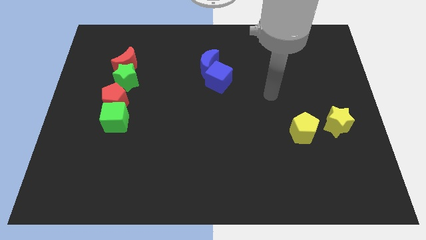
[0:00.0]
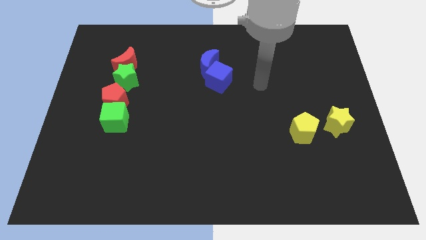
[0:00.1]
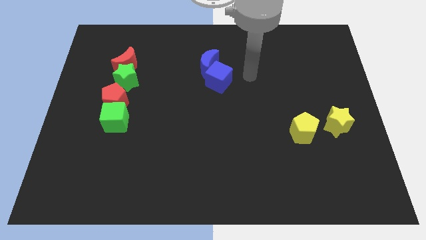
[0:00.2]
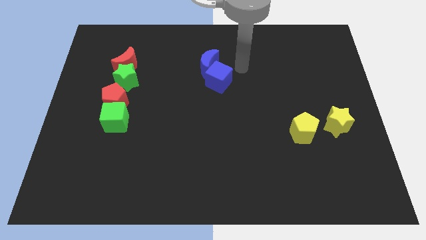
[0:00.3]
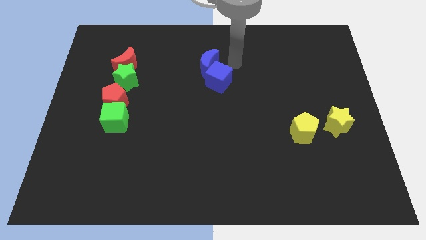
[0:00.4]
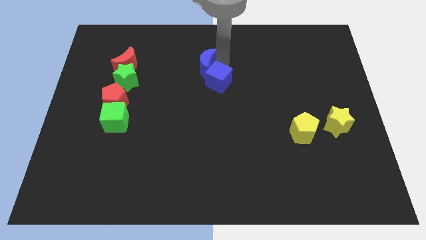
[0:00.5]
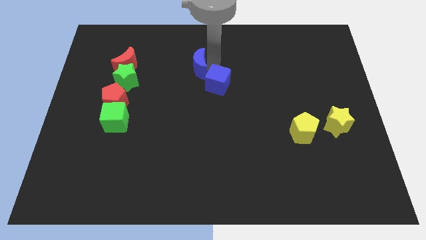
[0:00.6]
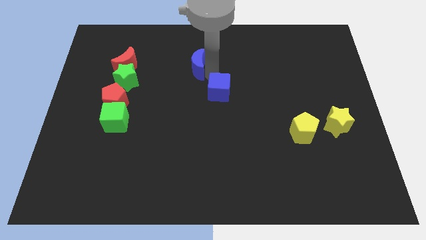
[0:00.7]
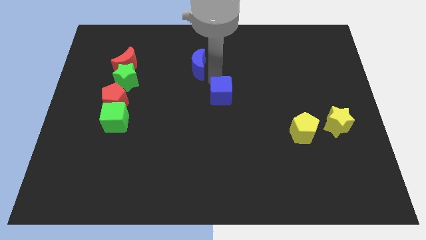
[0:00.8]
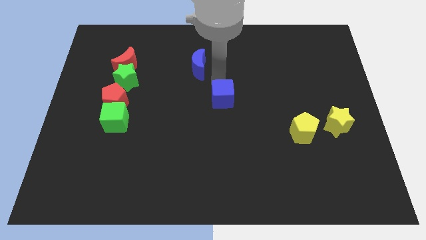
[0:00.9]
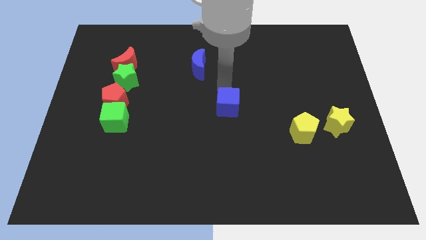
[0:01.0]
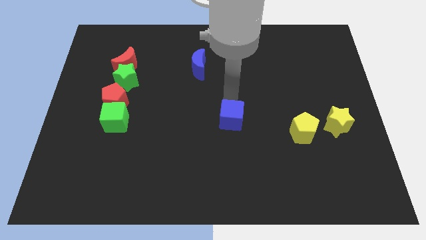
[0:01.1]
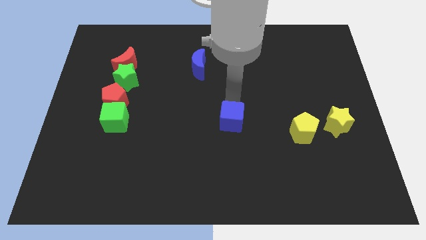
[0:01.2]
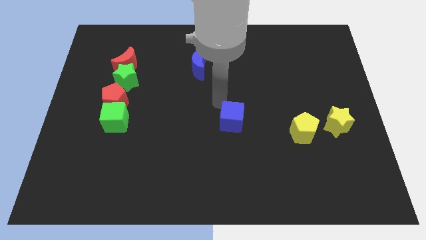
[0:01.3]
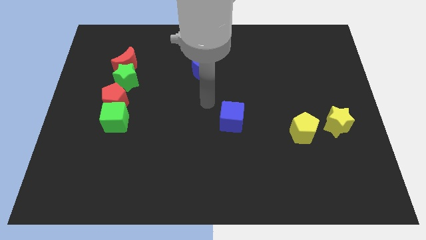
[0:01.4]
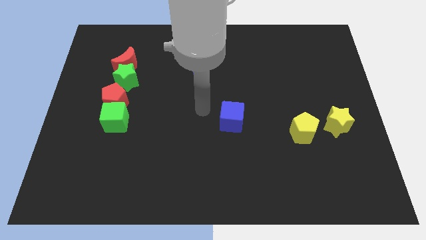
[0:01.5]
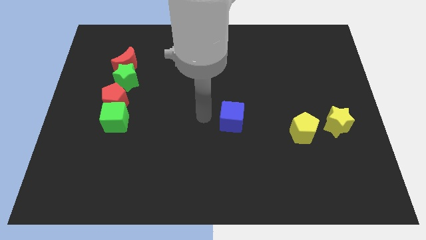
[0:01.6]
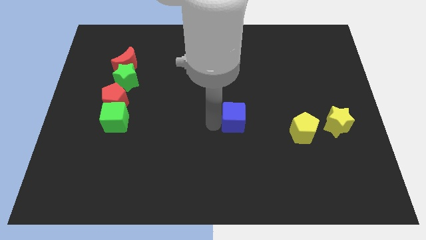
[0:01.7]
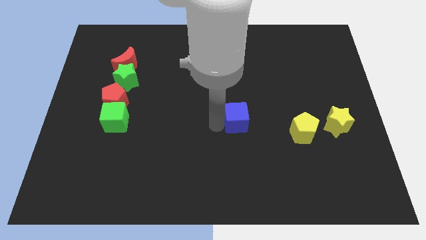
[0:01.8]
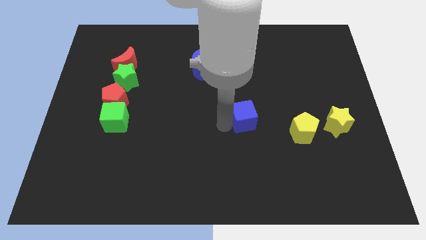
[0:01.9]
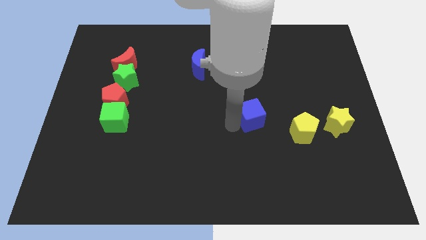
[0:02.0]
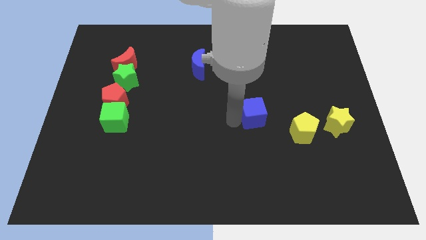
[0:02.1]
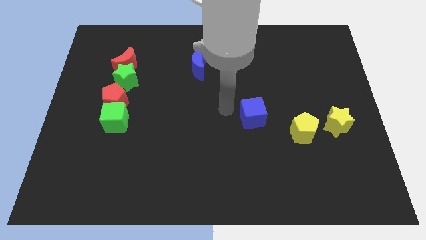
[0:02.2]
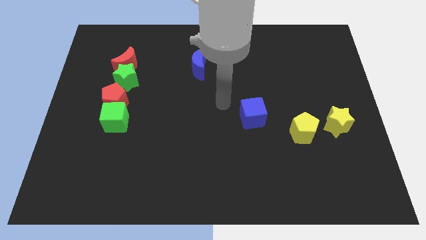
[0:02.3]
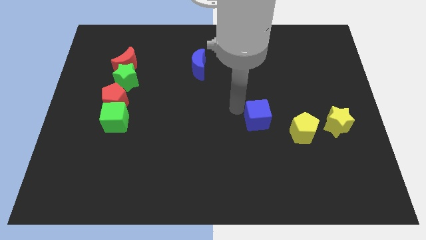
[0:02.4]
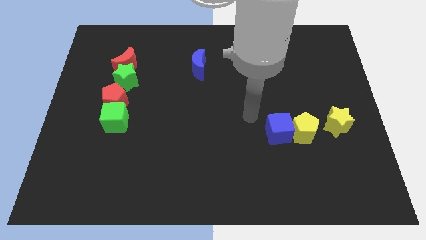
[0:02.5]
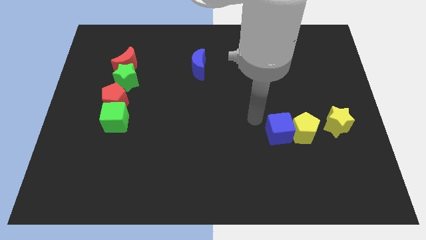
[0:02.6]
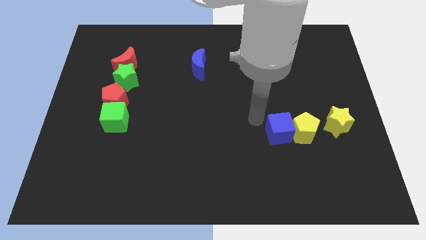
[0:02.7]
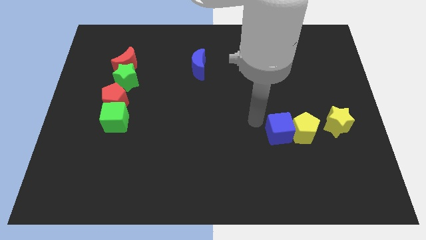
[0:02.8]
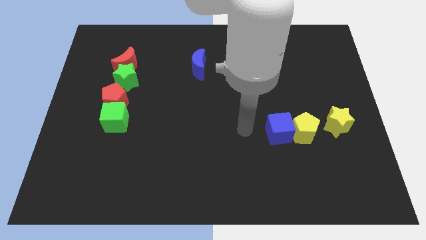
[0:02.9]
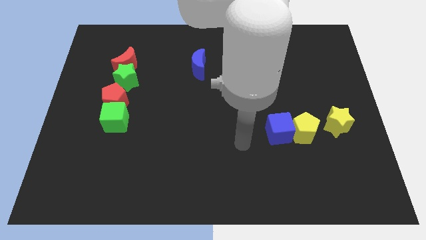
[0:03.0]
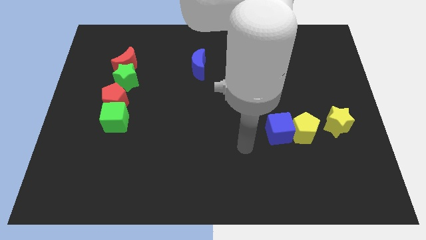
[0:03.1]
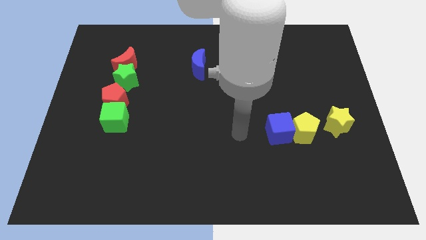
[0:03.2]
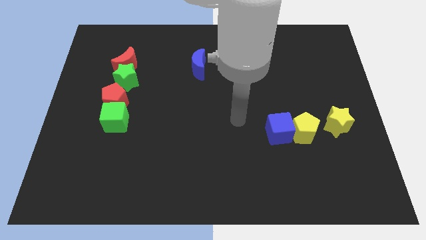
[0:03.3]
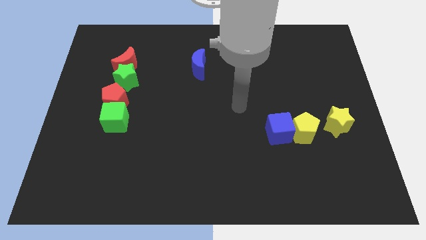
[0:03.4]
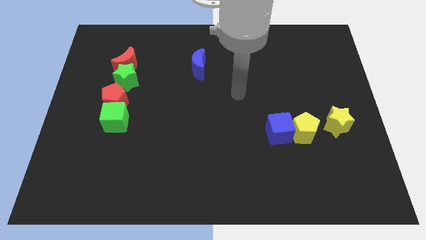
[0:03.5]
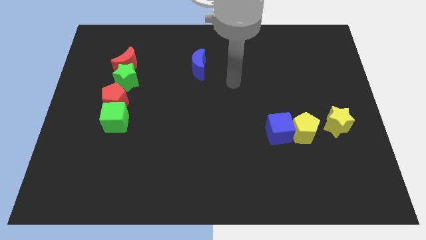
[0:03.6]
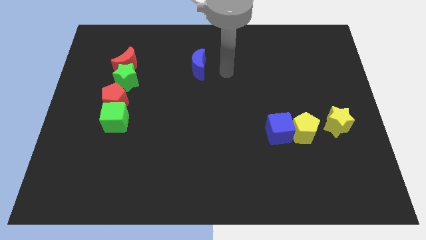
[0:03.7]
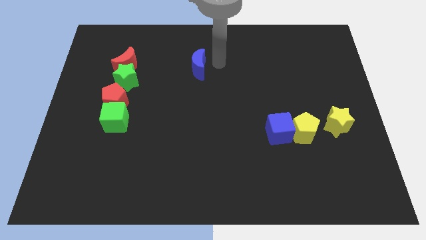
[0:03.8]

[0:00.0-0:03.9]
place the blue cube left to the yellow pentagon

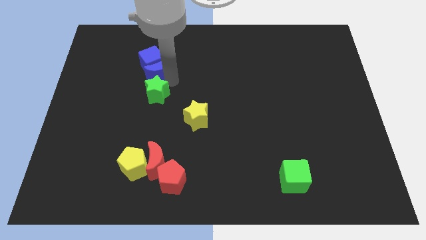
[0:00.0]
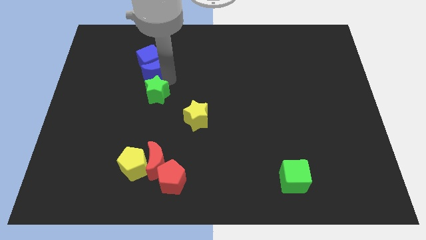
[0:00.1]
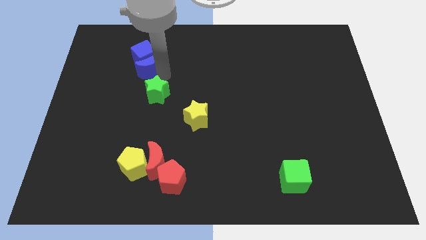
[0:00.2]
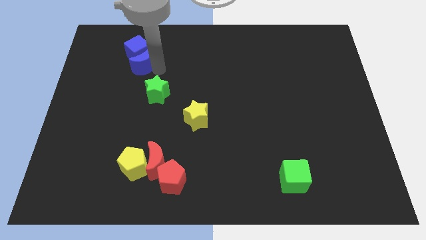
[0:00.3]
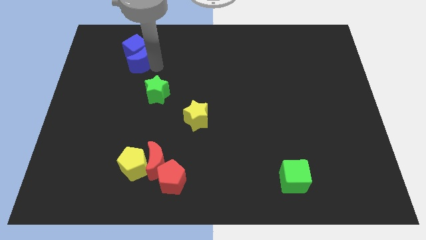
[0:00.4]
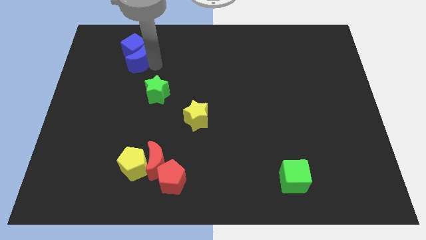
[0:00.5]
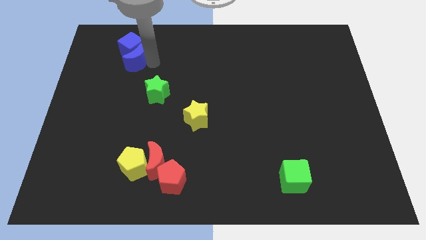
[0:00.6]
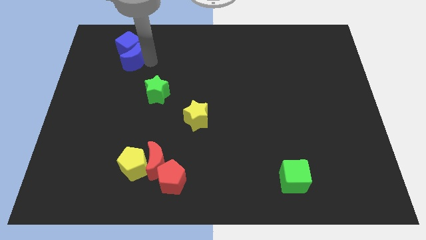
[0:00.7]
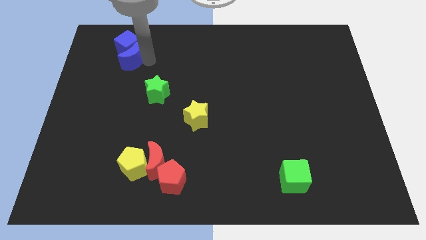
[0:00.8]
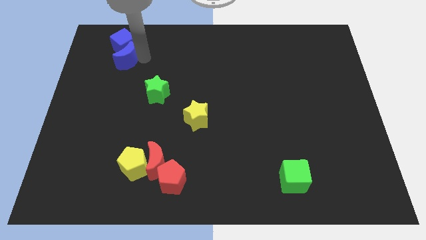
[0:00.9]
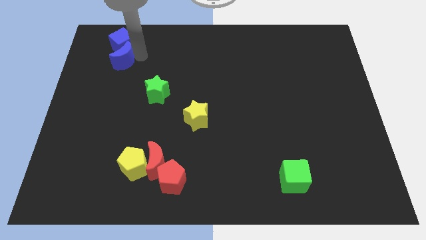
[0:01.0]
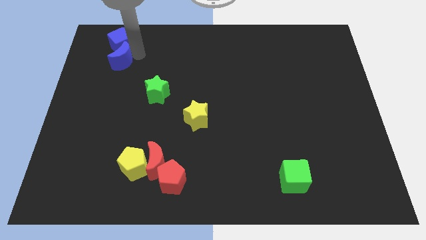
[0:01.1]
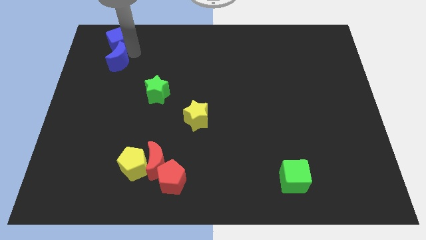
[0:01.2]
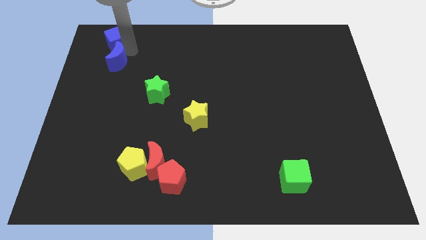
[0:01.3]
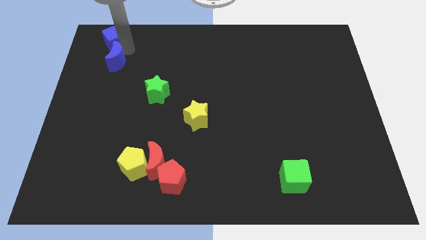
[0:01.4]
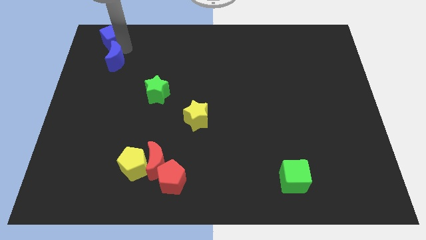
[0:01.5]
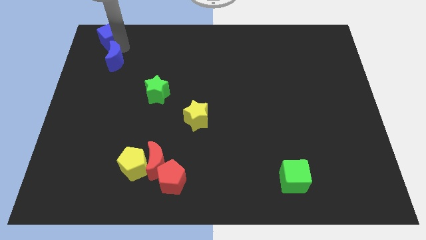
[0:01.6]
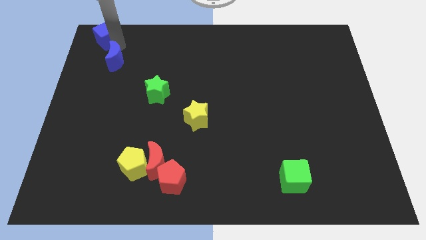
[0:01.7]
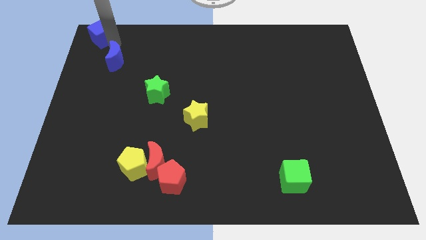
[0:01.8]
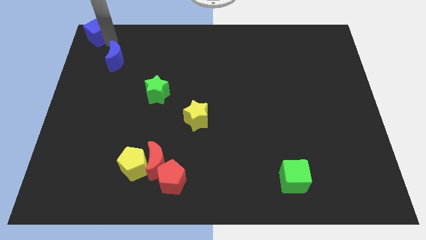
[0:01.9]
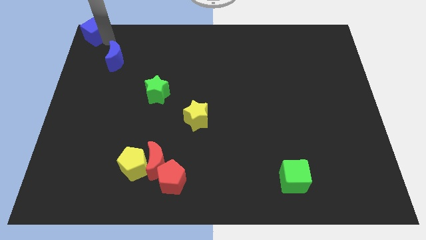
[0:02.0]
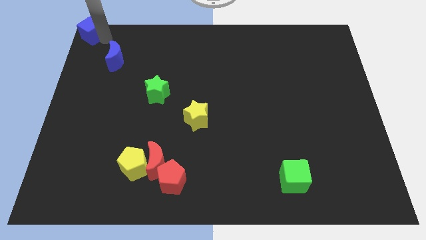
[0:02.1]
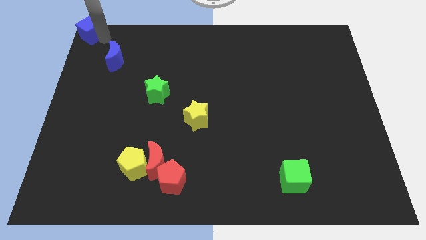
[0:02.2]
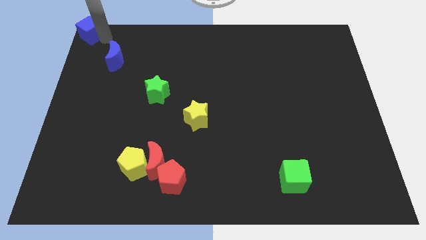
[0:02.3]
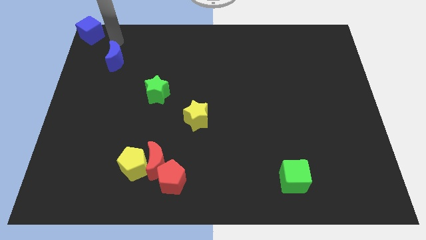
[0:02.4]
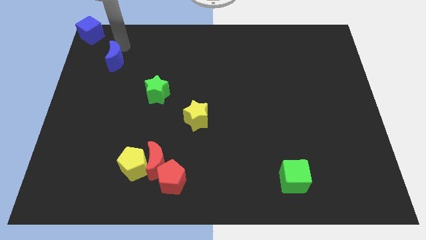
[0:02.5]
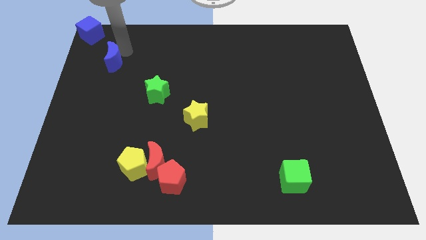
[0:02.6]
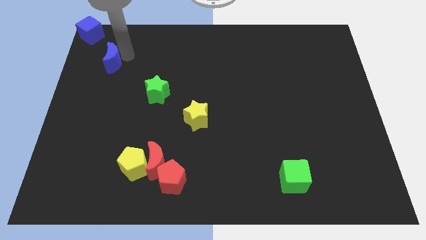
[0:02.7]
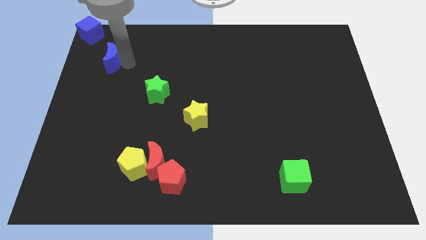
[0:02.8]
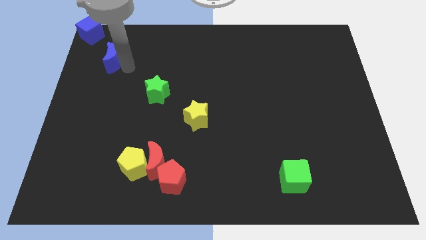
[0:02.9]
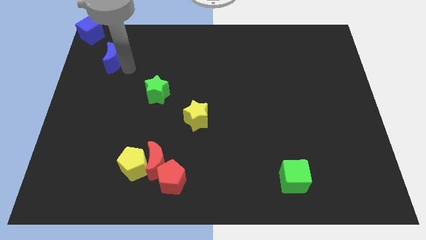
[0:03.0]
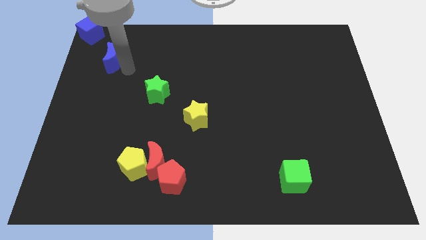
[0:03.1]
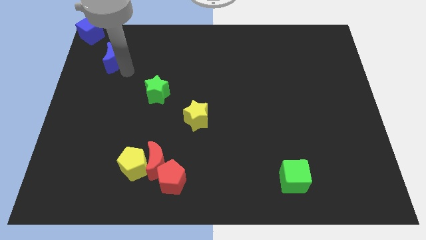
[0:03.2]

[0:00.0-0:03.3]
separate blue cube from the blue moon

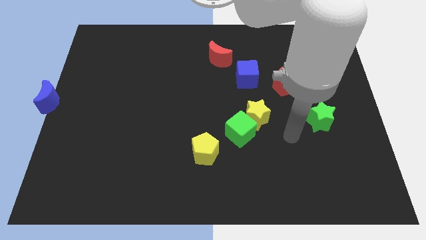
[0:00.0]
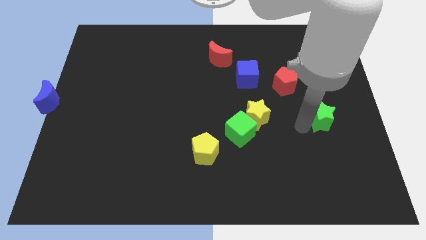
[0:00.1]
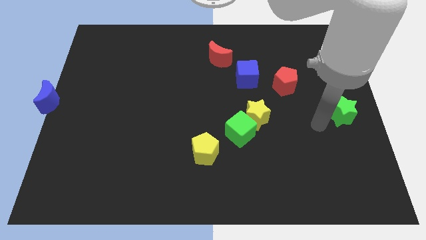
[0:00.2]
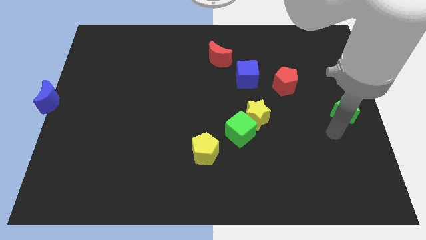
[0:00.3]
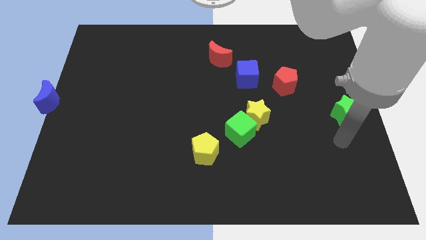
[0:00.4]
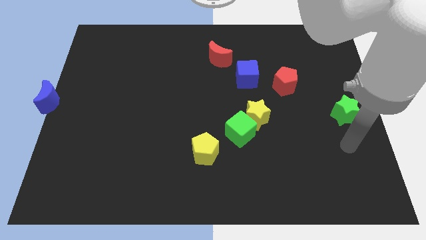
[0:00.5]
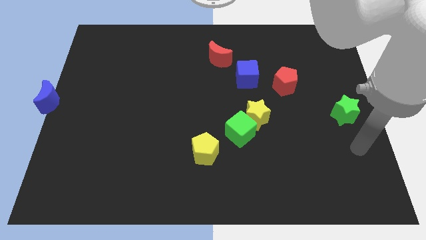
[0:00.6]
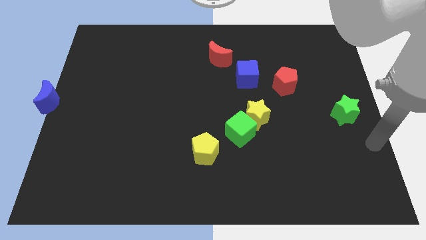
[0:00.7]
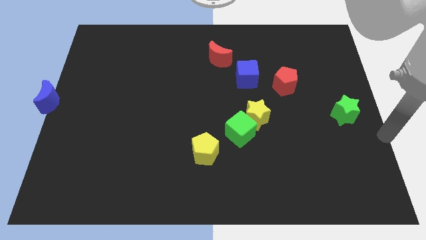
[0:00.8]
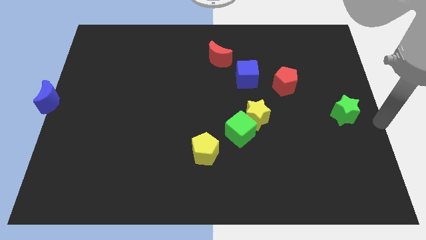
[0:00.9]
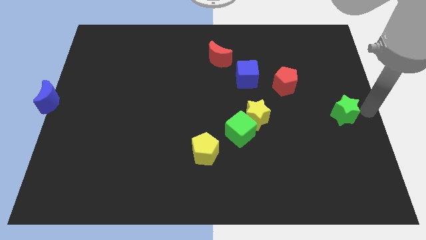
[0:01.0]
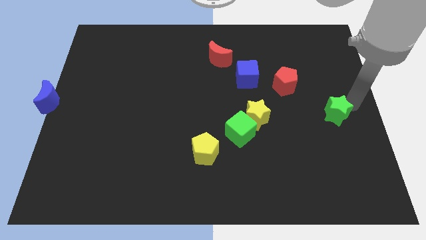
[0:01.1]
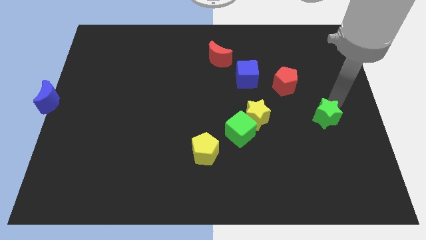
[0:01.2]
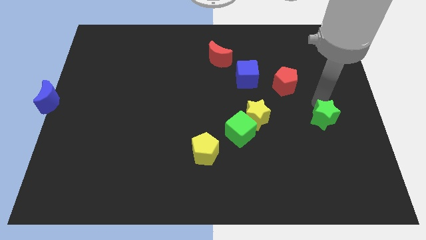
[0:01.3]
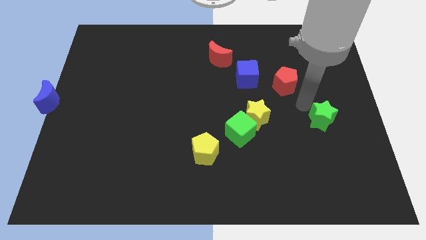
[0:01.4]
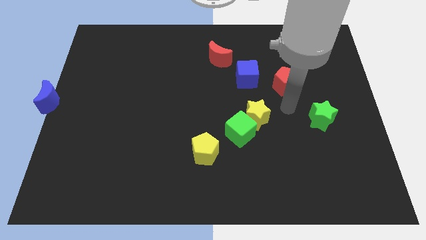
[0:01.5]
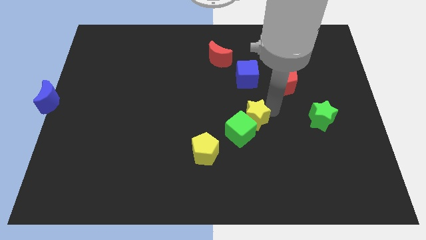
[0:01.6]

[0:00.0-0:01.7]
move green star to the right of yellow star

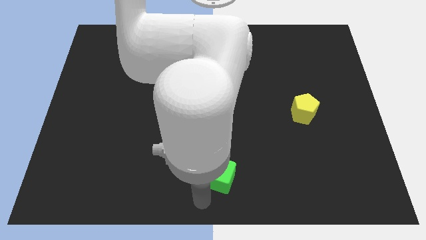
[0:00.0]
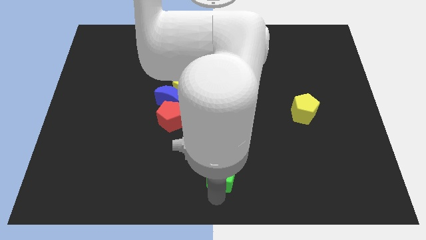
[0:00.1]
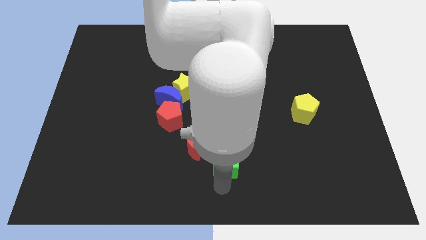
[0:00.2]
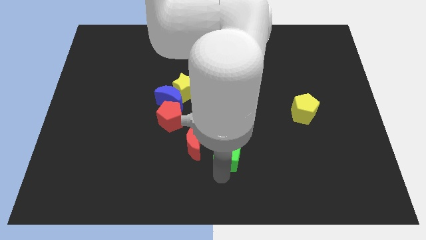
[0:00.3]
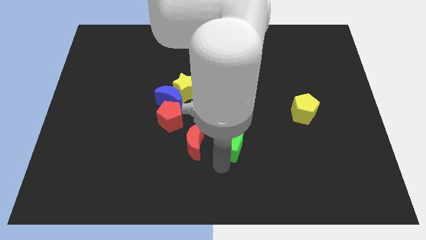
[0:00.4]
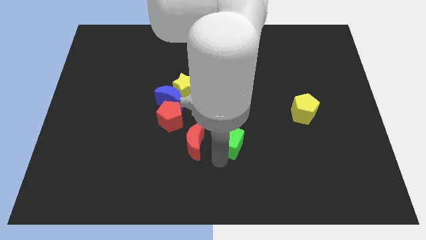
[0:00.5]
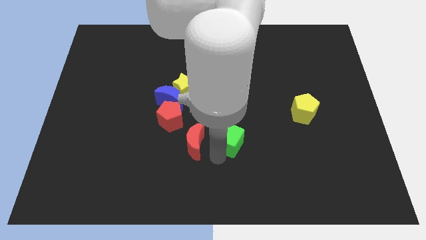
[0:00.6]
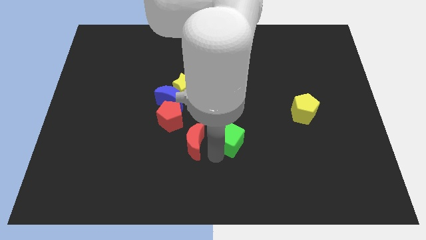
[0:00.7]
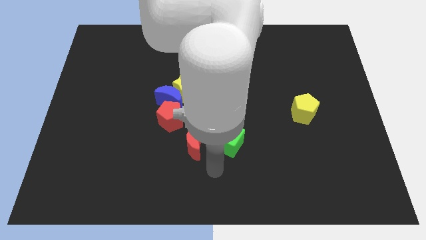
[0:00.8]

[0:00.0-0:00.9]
place green cube below green star
